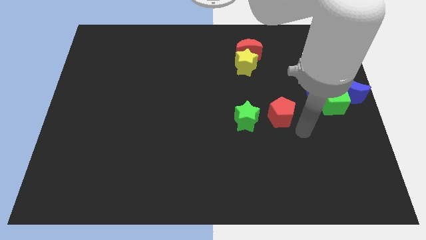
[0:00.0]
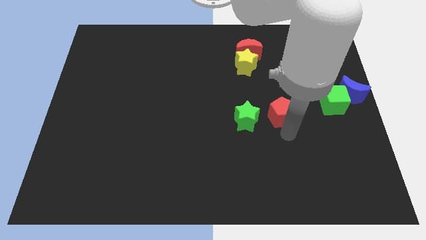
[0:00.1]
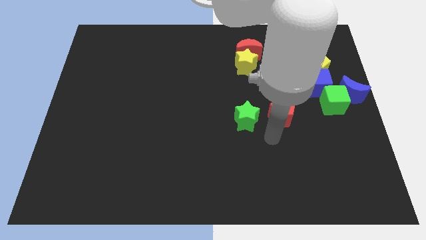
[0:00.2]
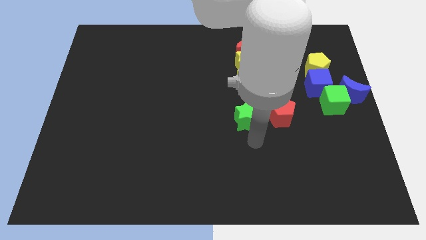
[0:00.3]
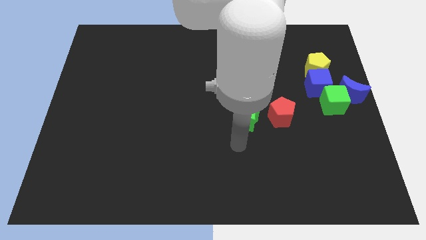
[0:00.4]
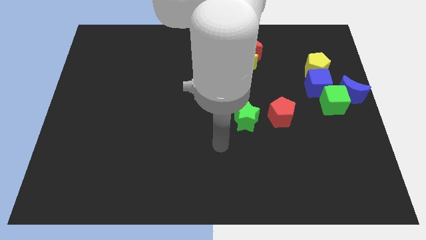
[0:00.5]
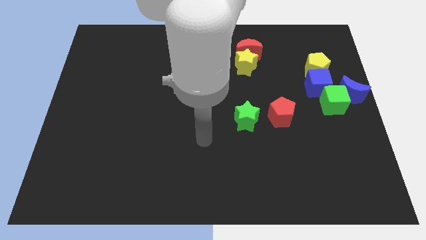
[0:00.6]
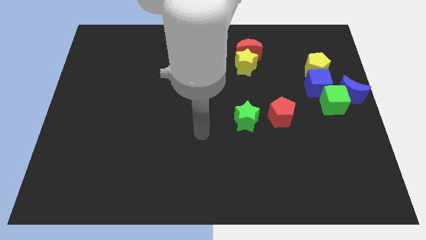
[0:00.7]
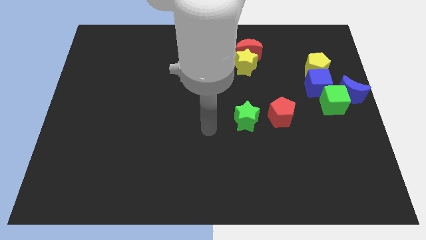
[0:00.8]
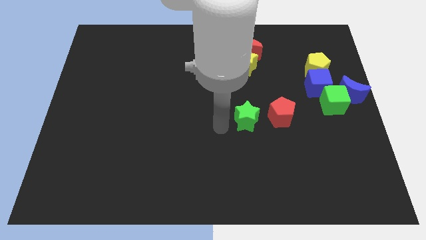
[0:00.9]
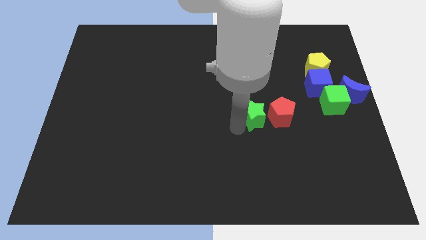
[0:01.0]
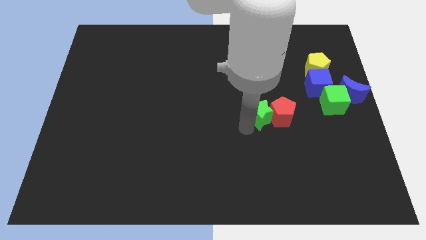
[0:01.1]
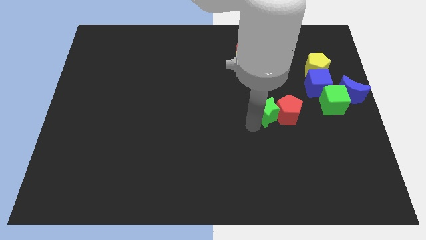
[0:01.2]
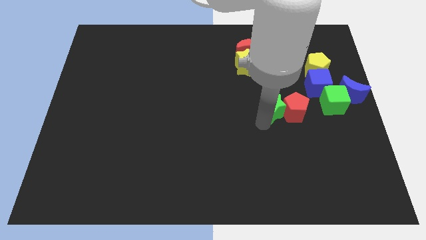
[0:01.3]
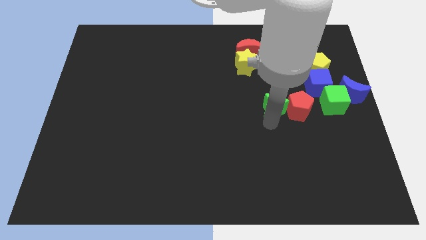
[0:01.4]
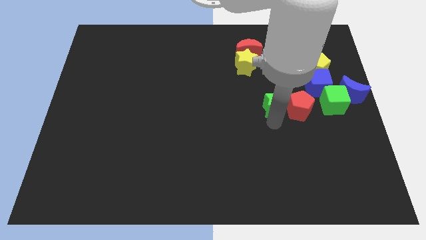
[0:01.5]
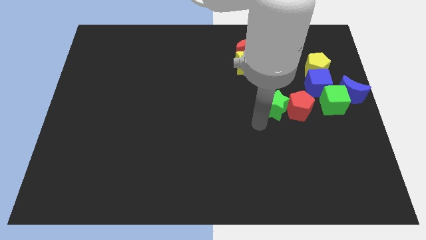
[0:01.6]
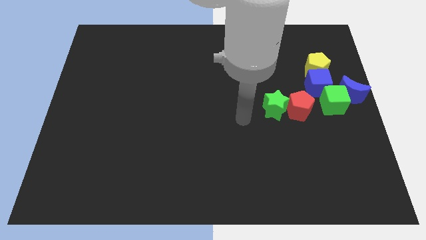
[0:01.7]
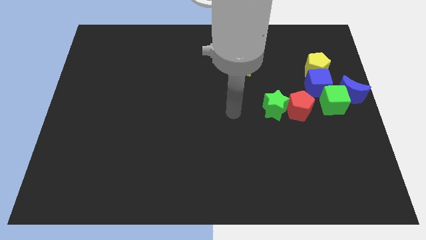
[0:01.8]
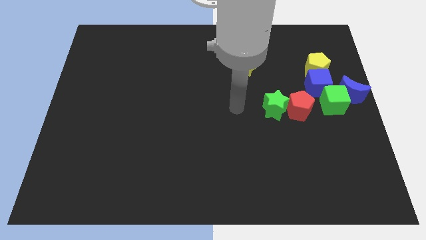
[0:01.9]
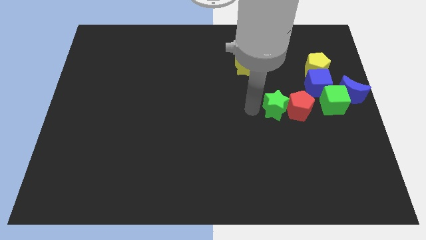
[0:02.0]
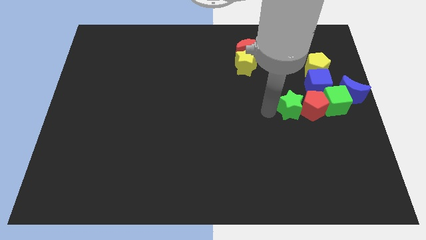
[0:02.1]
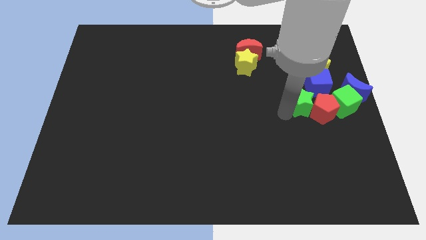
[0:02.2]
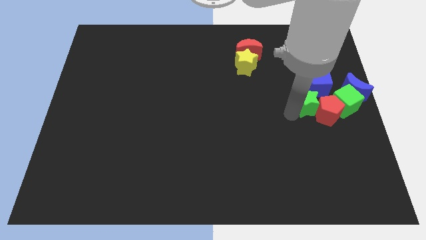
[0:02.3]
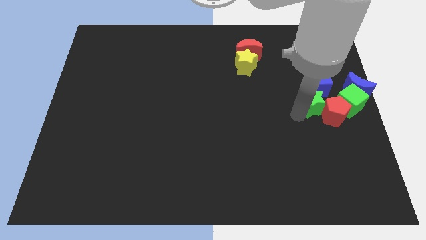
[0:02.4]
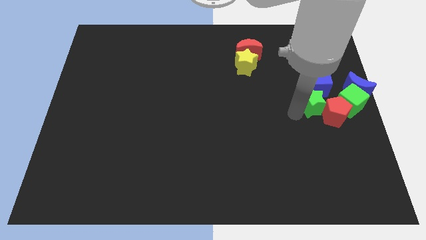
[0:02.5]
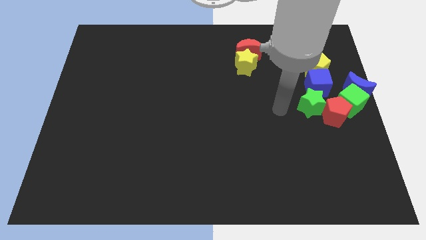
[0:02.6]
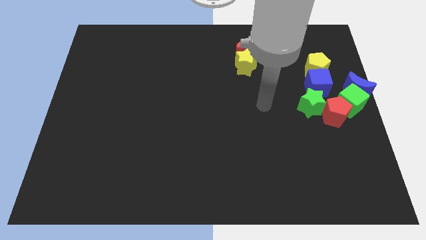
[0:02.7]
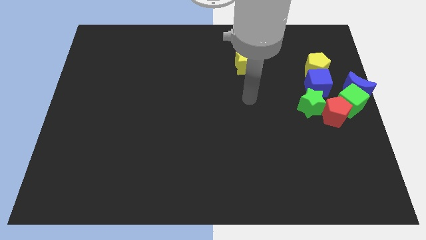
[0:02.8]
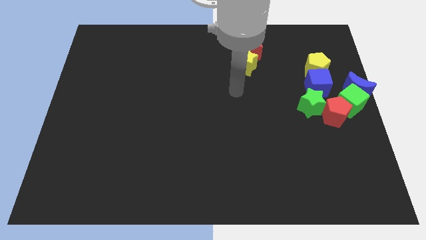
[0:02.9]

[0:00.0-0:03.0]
push the green star and red pentagon into the green cube

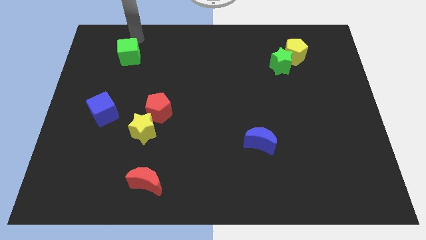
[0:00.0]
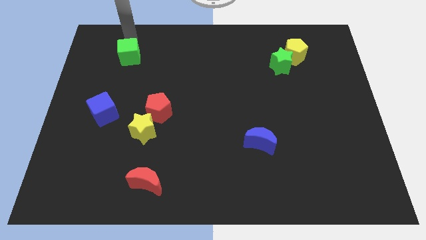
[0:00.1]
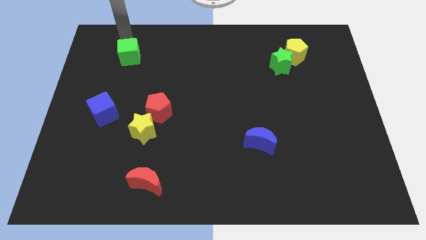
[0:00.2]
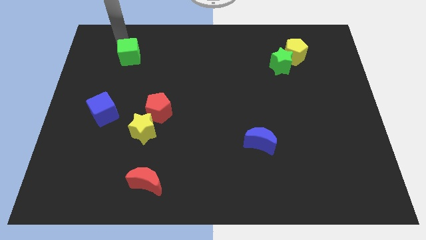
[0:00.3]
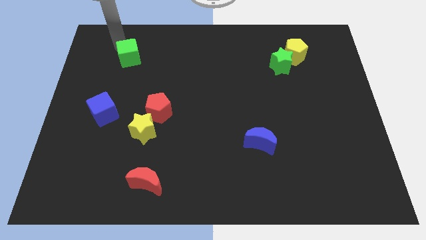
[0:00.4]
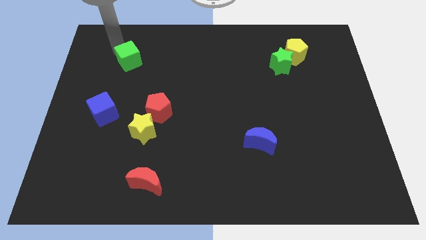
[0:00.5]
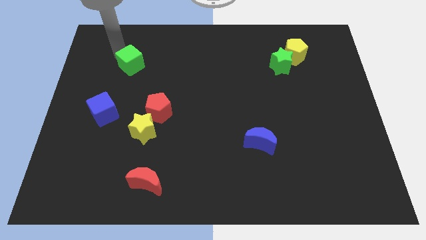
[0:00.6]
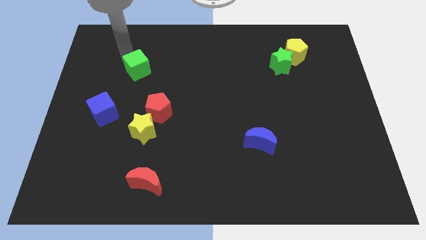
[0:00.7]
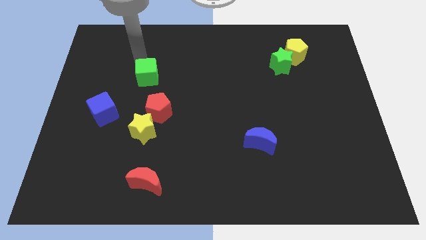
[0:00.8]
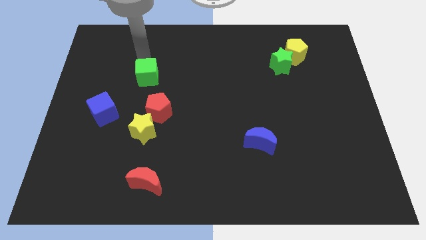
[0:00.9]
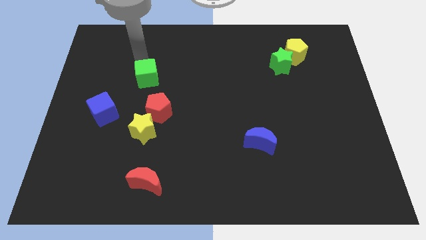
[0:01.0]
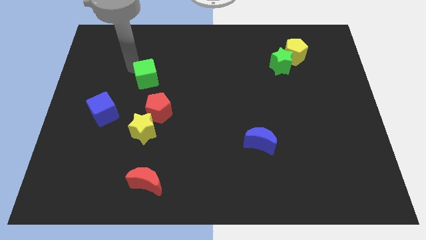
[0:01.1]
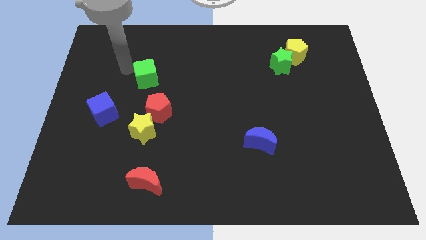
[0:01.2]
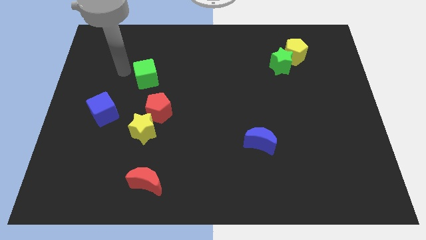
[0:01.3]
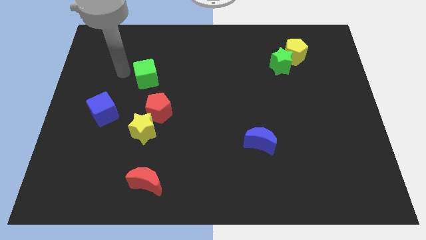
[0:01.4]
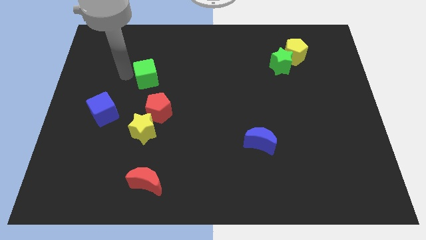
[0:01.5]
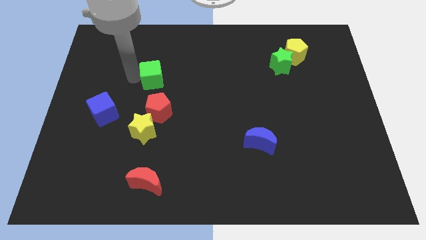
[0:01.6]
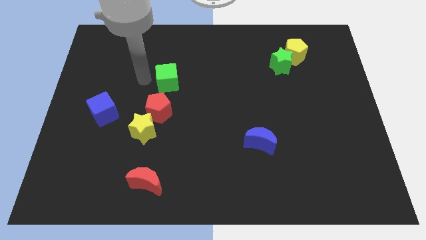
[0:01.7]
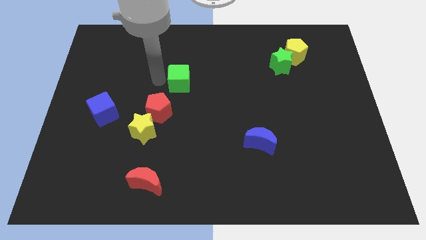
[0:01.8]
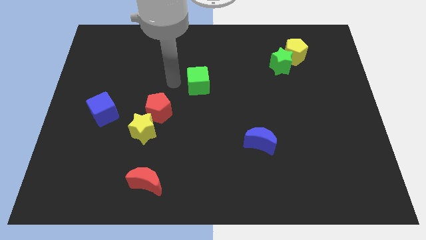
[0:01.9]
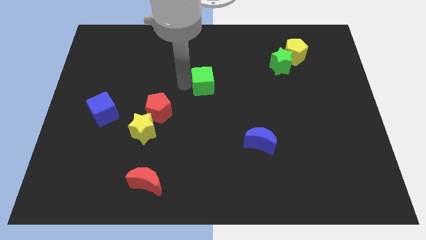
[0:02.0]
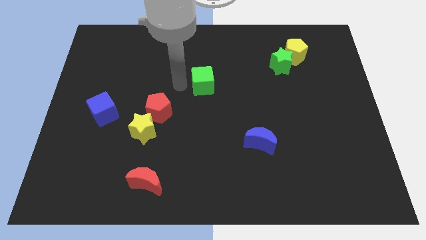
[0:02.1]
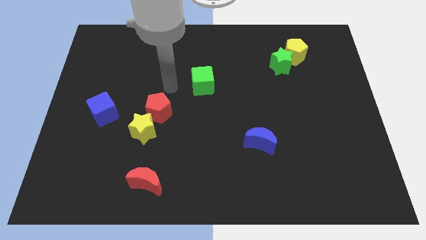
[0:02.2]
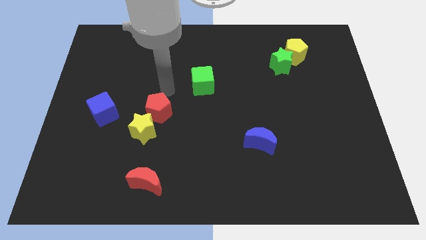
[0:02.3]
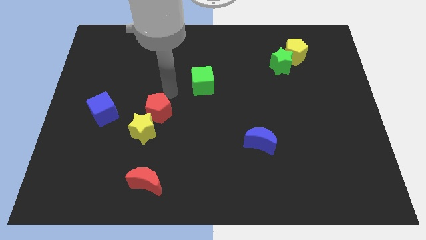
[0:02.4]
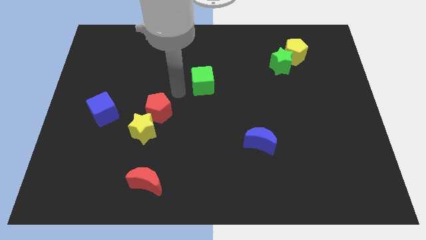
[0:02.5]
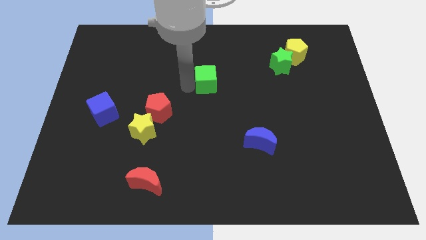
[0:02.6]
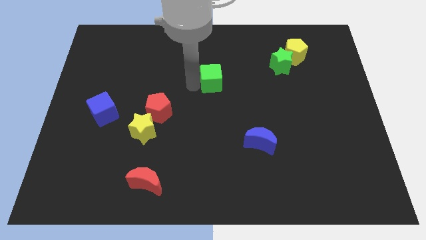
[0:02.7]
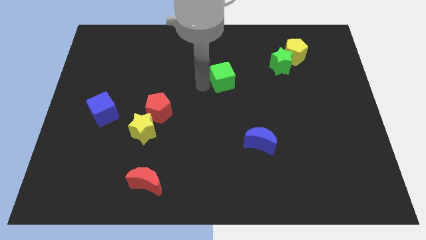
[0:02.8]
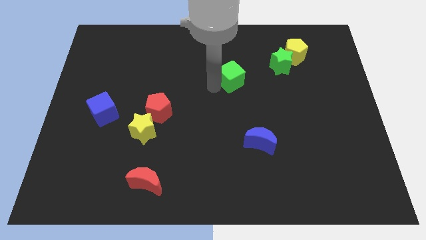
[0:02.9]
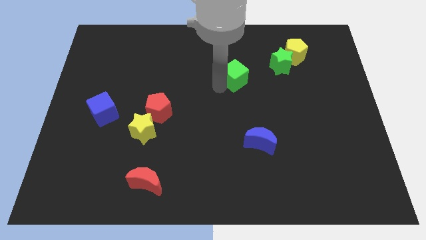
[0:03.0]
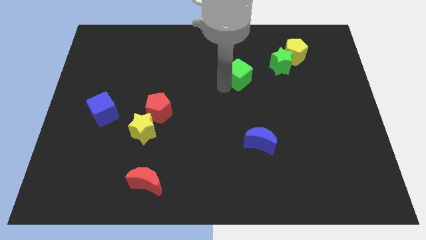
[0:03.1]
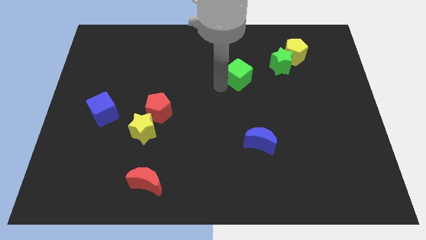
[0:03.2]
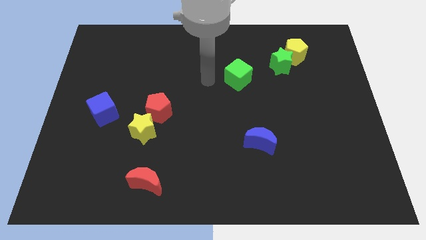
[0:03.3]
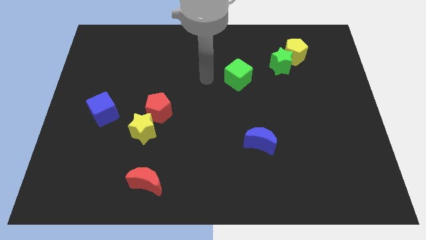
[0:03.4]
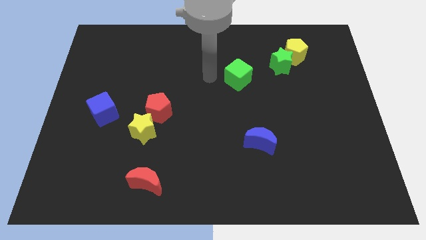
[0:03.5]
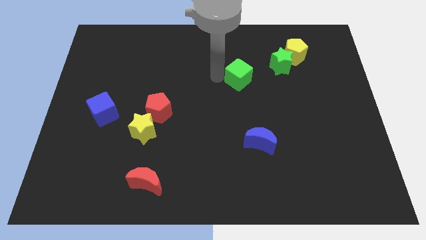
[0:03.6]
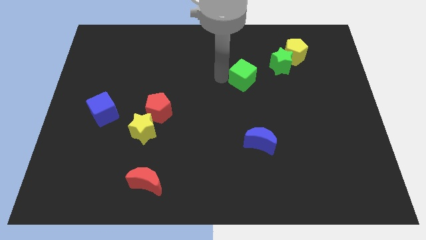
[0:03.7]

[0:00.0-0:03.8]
push the green cube towards the green star

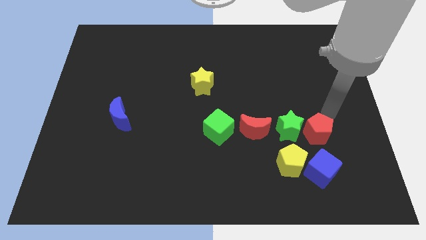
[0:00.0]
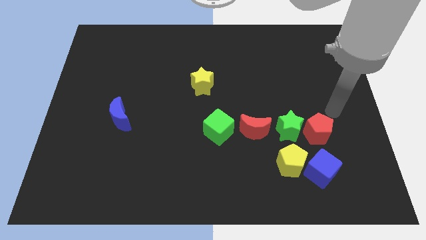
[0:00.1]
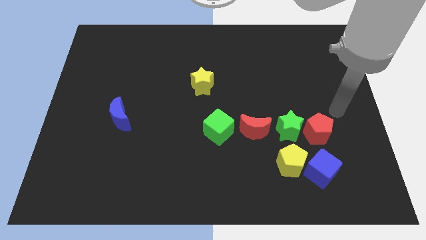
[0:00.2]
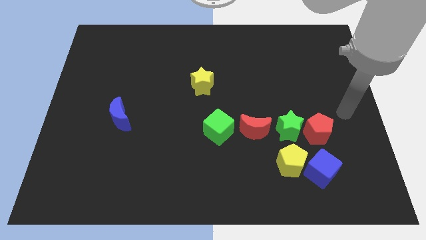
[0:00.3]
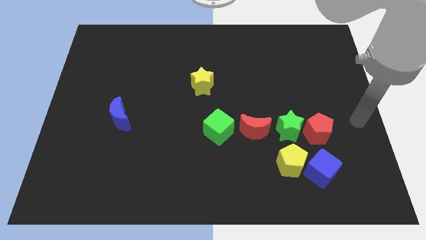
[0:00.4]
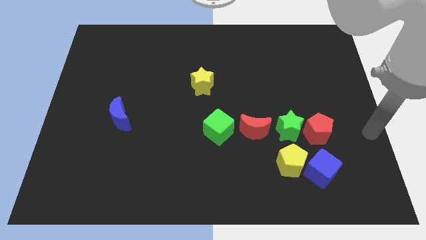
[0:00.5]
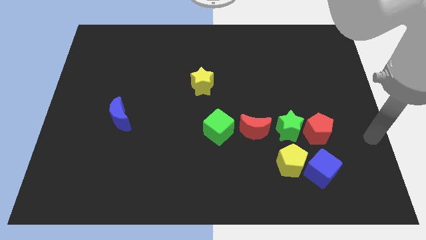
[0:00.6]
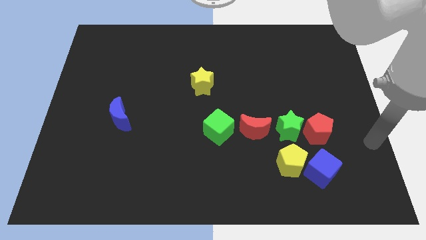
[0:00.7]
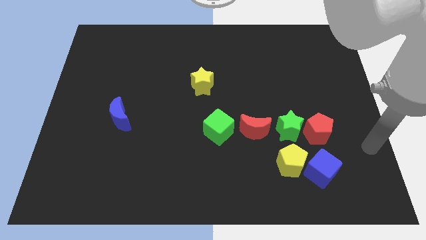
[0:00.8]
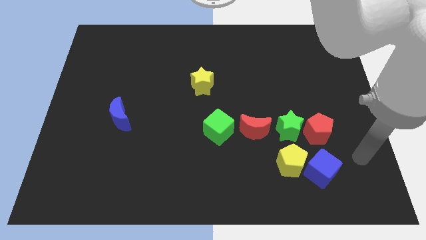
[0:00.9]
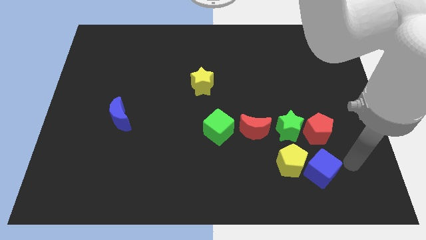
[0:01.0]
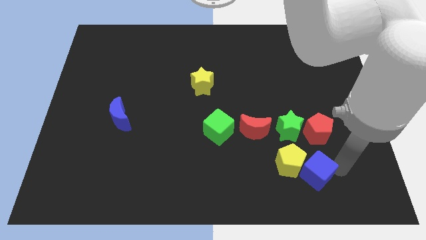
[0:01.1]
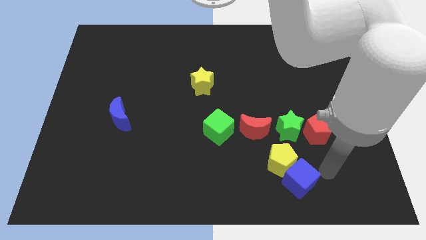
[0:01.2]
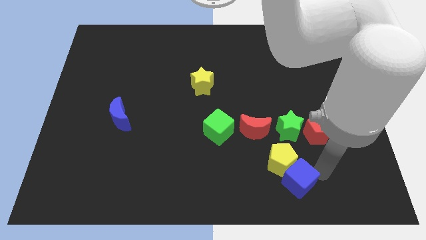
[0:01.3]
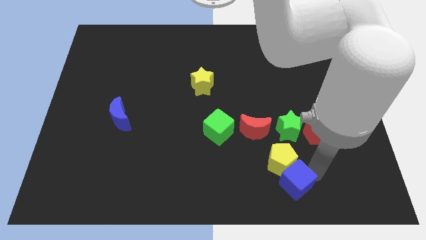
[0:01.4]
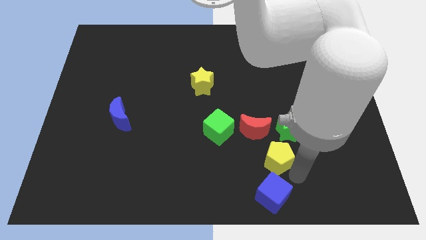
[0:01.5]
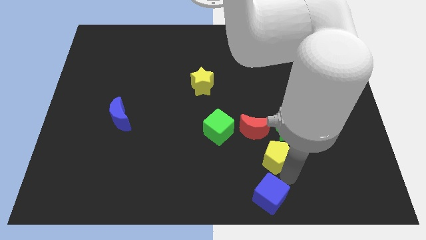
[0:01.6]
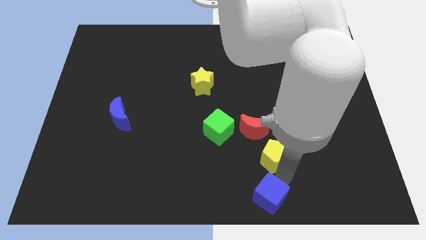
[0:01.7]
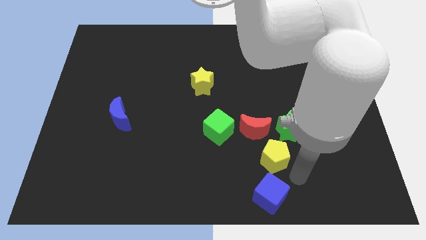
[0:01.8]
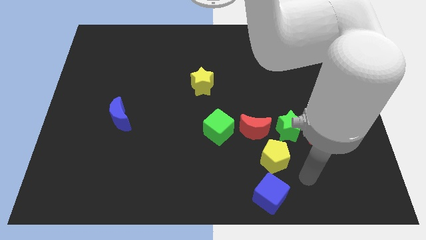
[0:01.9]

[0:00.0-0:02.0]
separate the blue cube and yellow pentagon

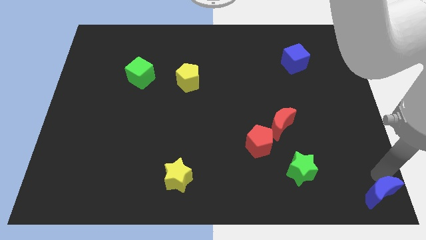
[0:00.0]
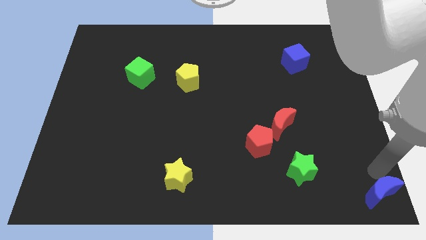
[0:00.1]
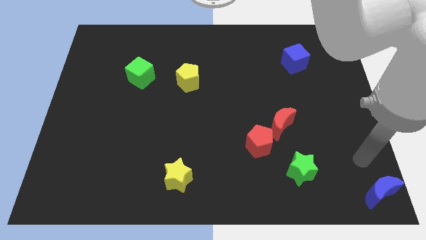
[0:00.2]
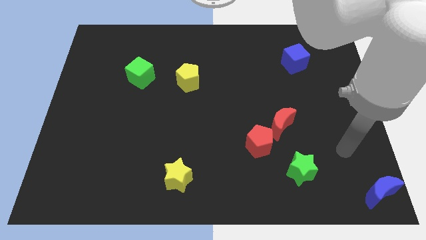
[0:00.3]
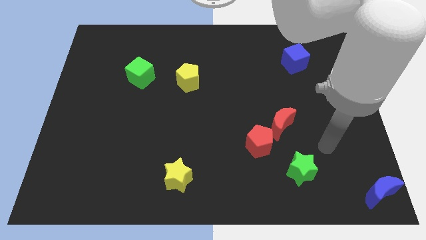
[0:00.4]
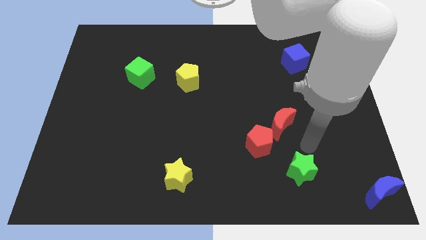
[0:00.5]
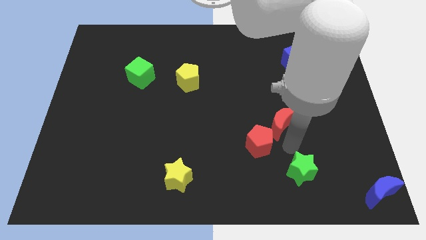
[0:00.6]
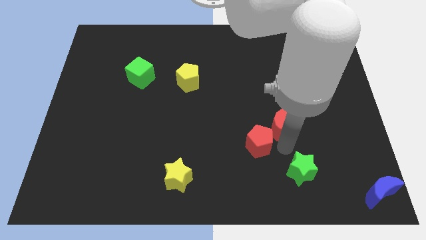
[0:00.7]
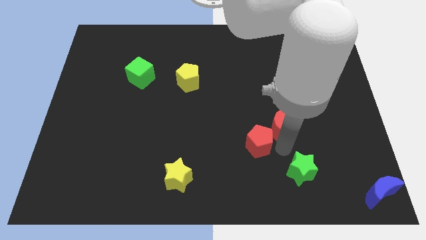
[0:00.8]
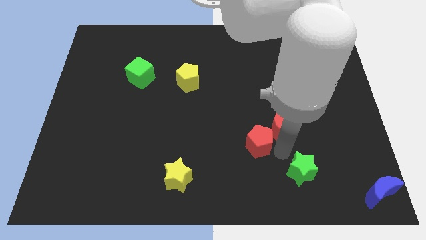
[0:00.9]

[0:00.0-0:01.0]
point your arm at the bottom of the red crescent
